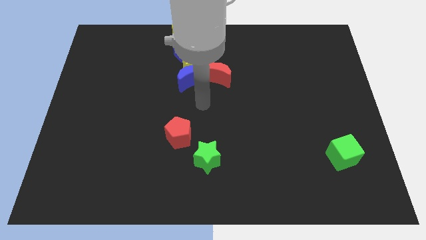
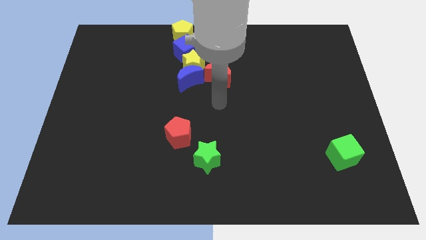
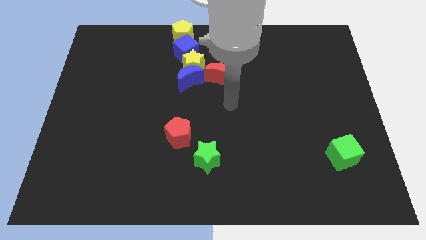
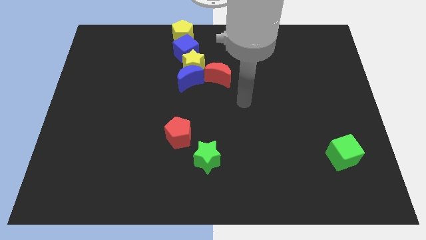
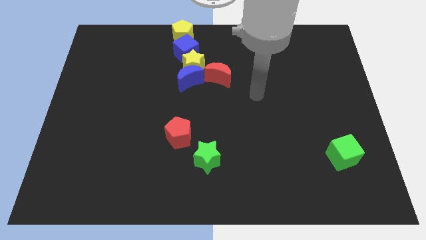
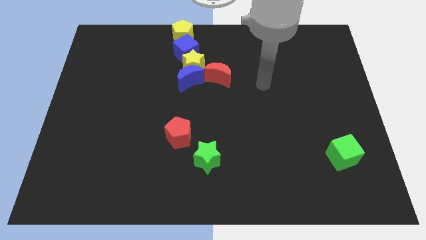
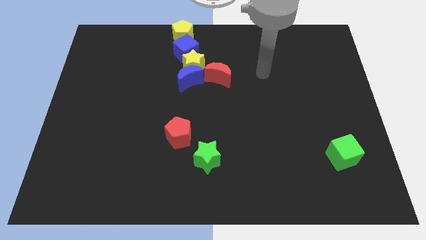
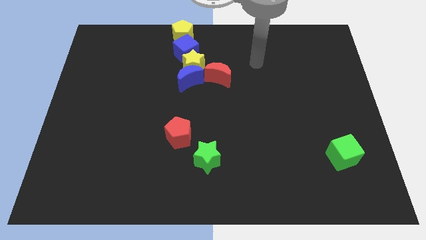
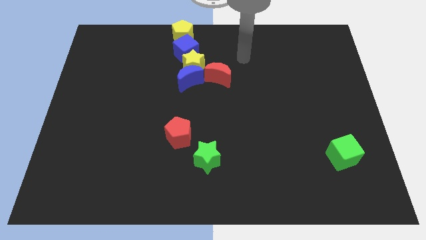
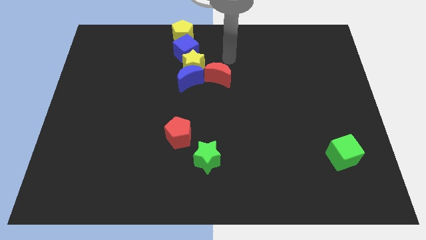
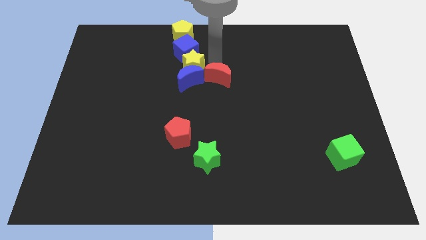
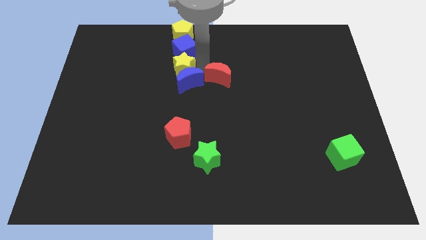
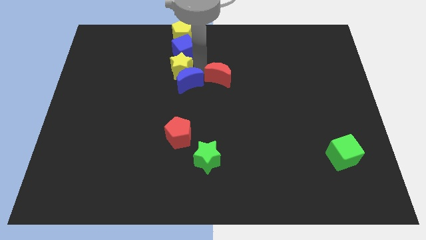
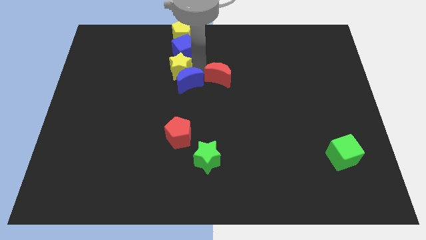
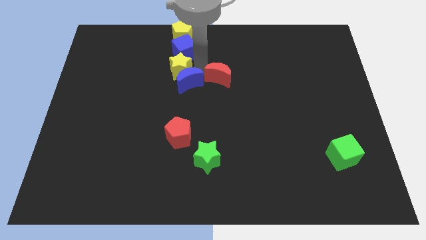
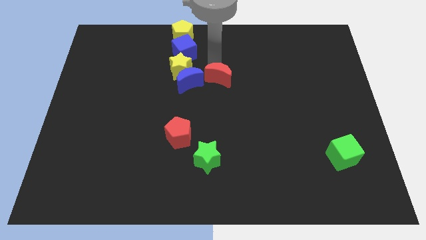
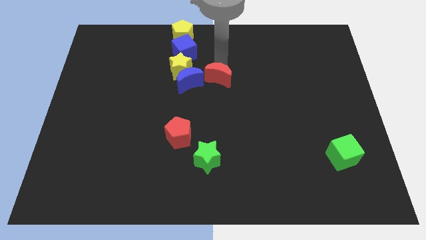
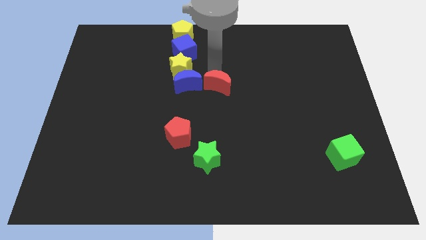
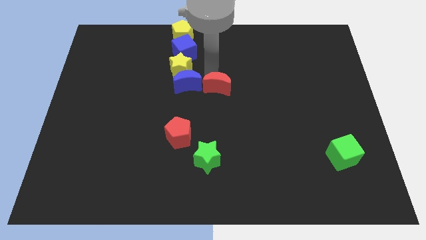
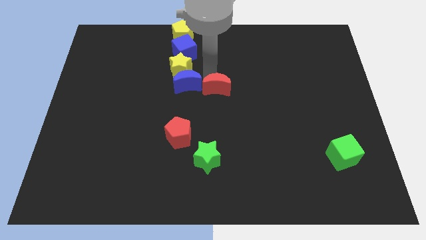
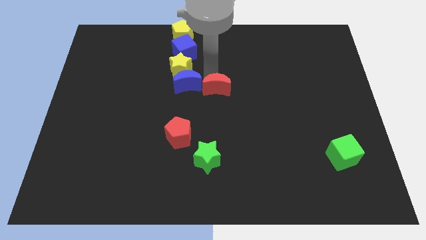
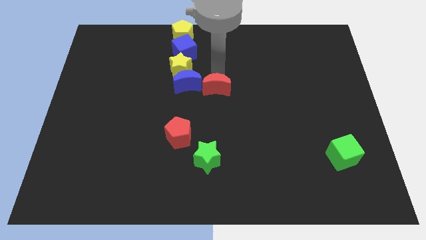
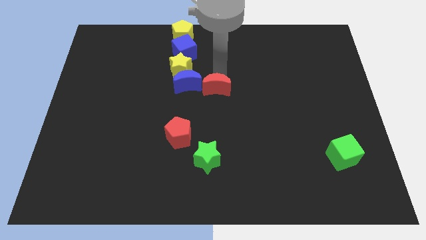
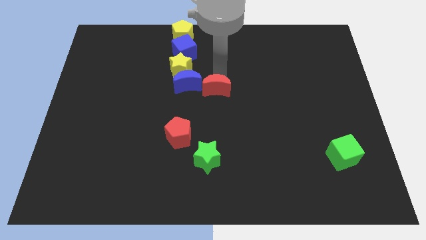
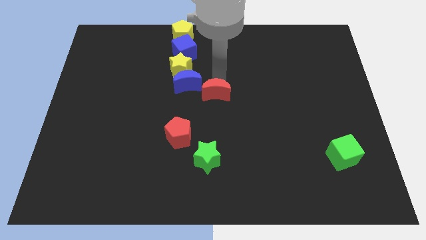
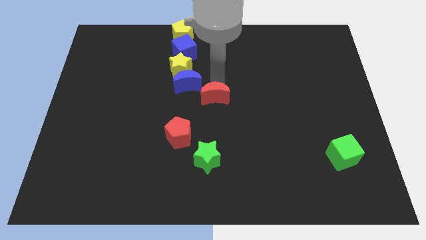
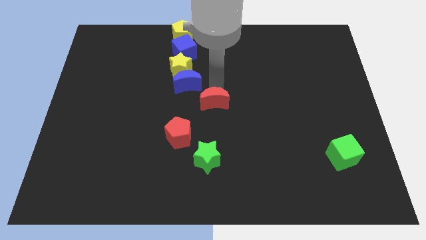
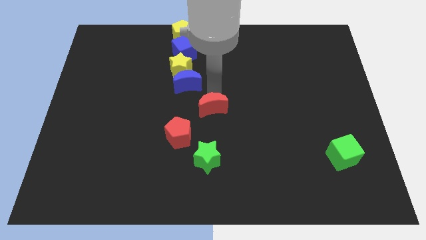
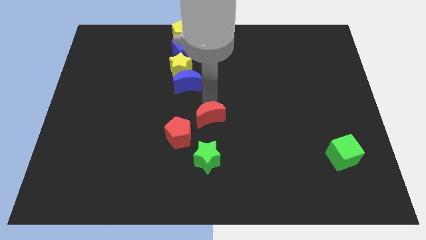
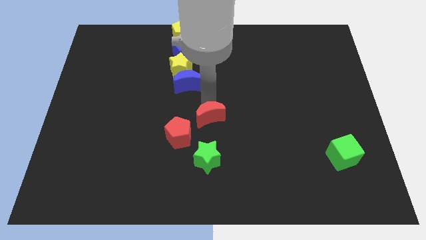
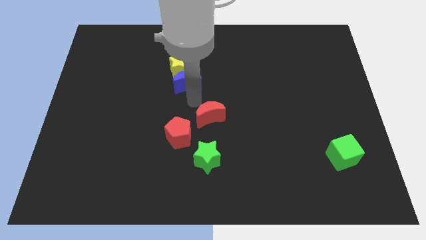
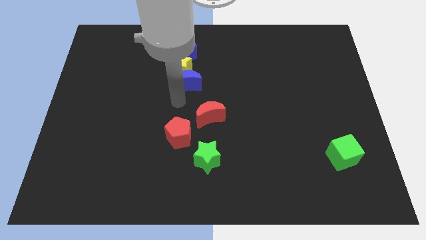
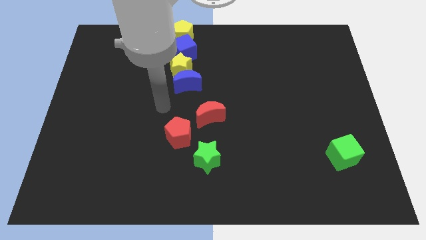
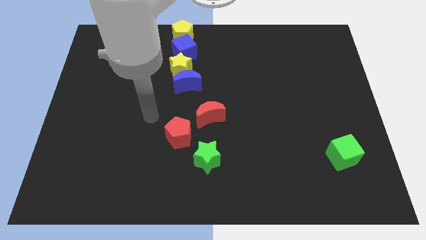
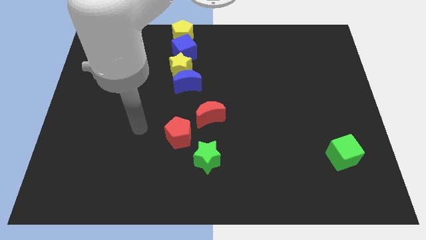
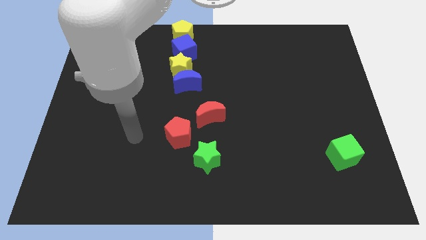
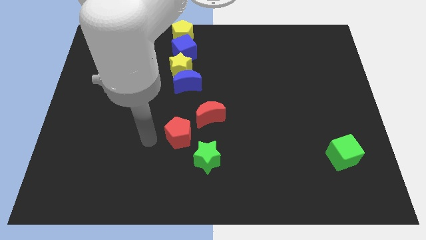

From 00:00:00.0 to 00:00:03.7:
separate red crescent from blue crescent

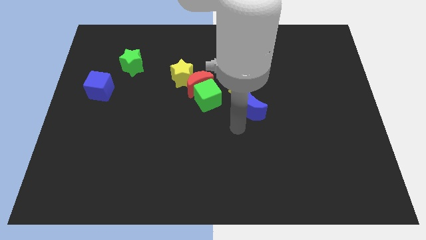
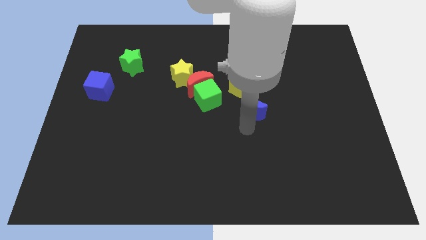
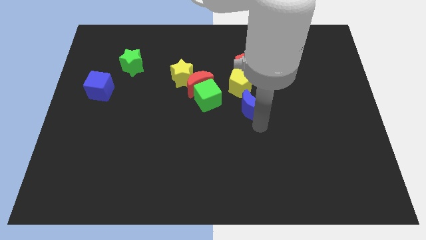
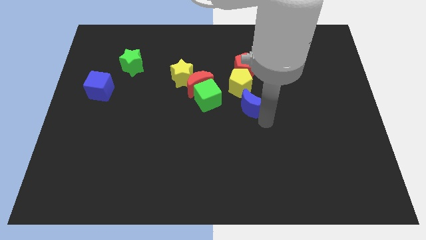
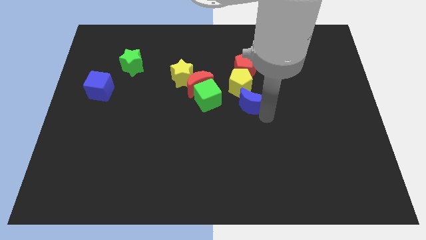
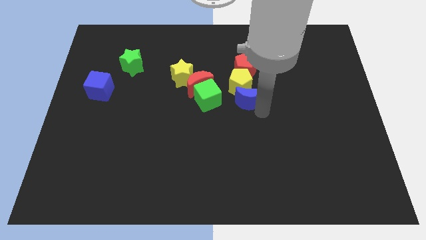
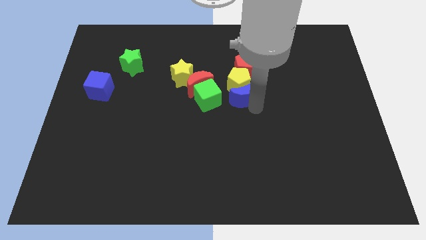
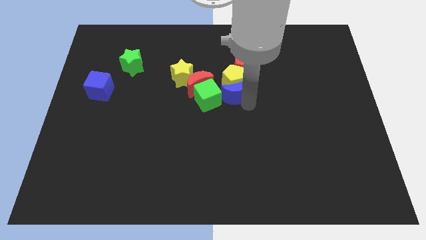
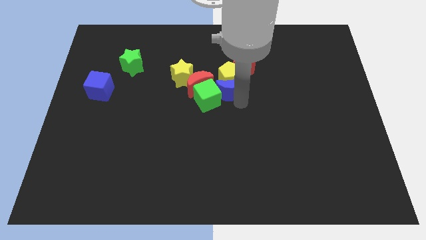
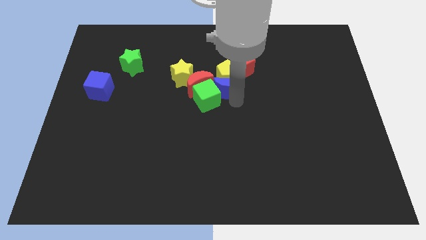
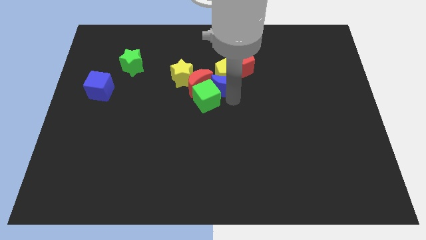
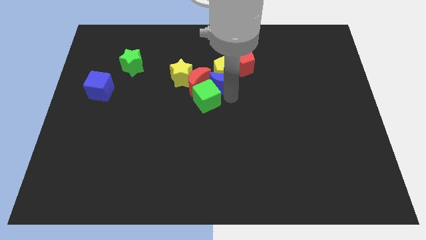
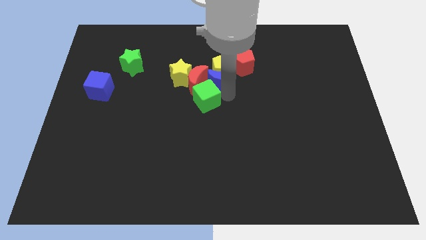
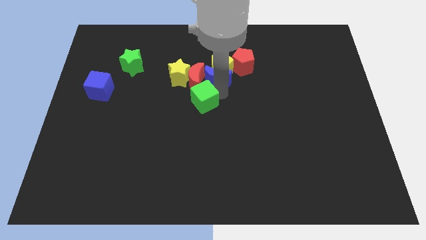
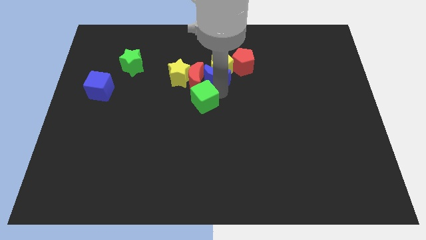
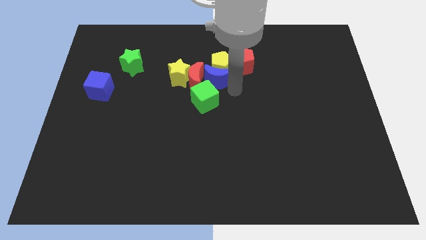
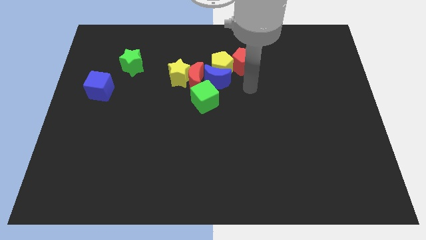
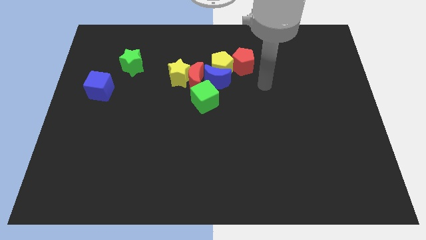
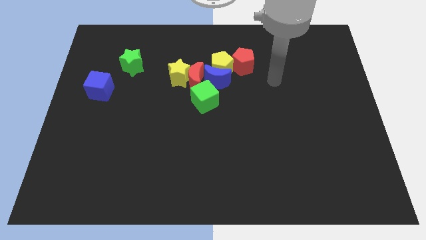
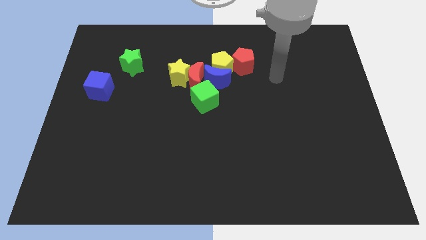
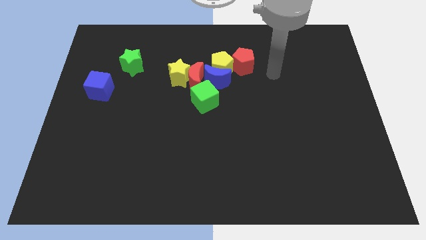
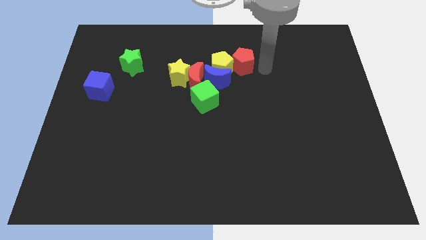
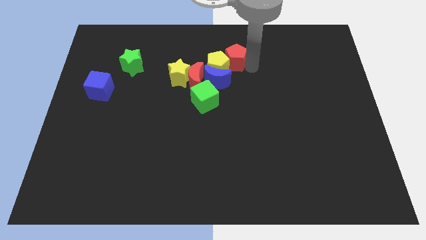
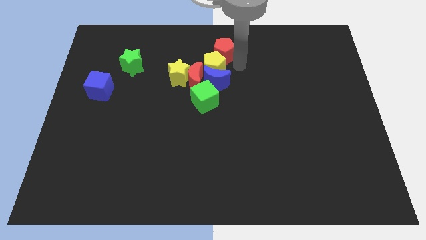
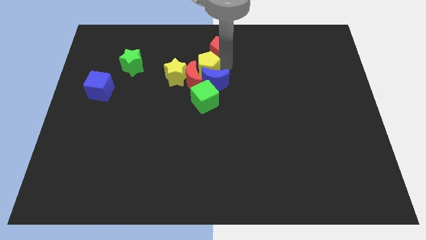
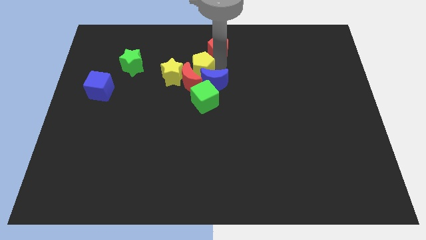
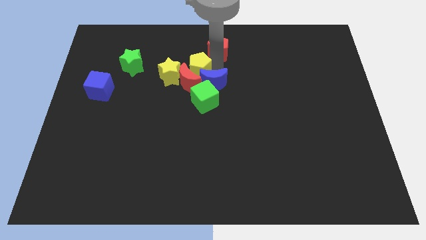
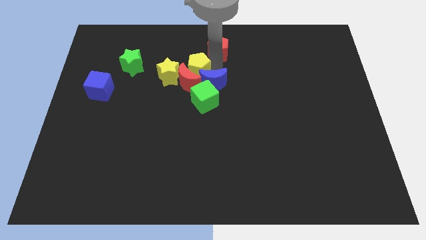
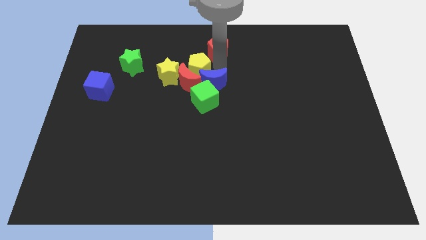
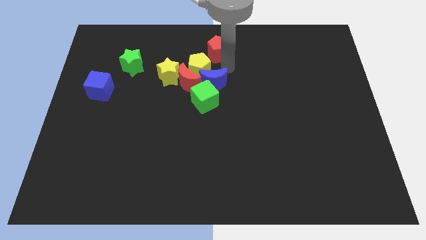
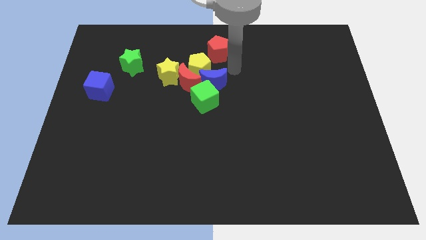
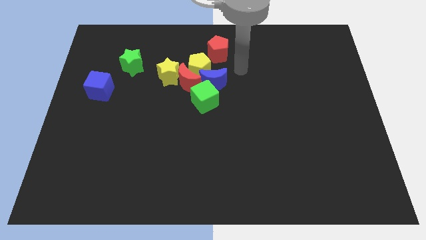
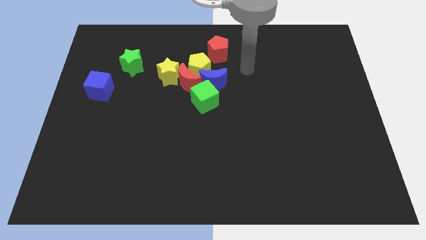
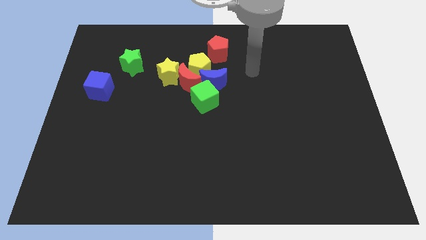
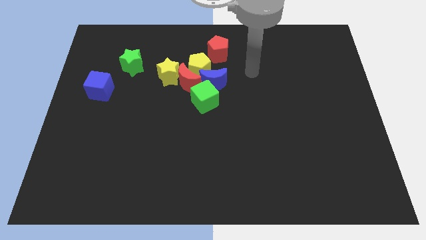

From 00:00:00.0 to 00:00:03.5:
move the yellow pentagon with the blue moon

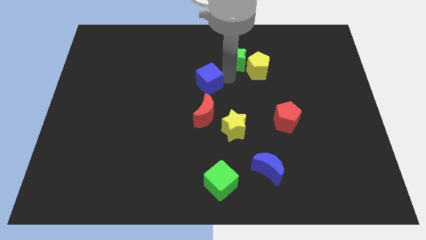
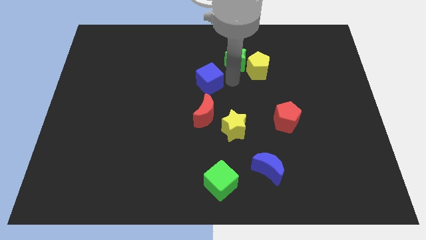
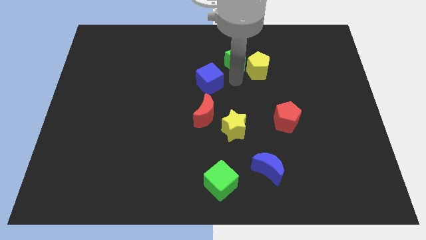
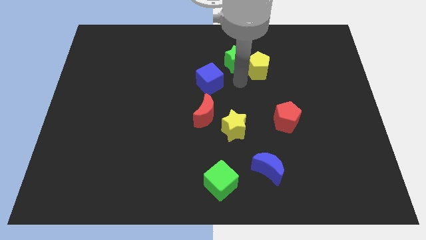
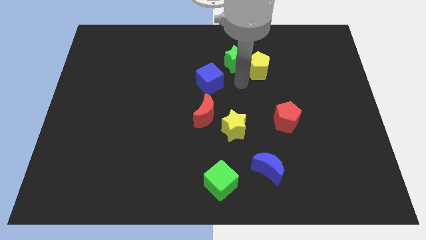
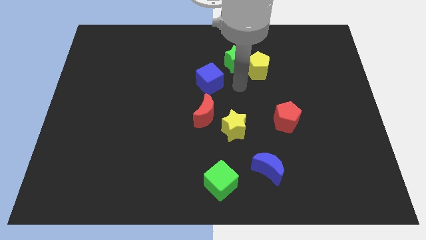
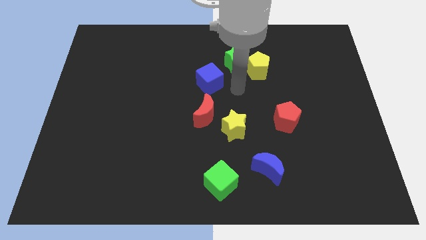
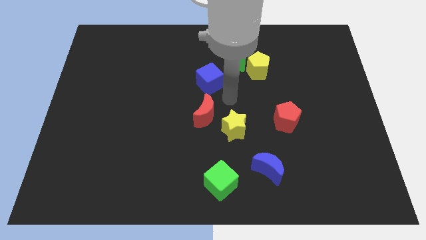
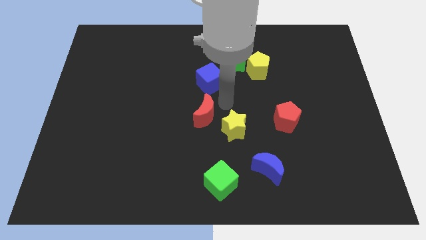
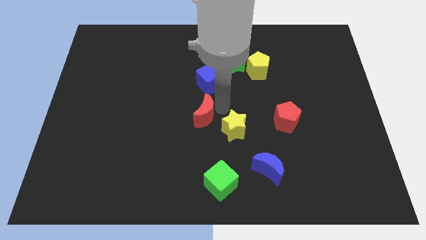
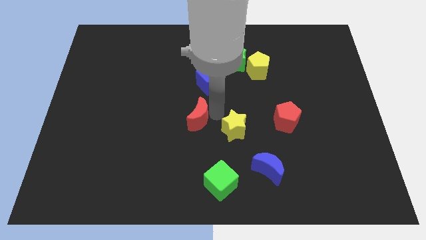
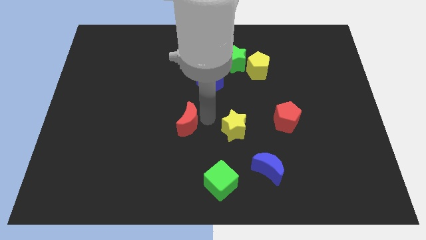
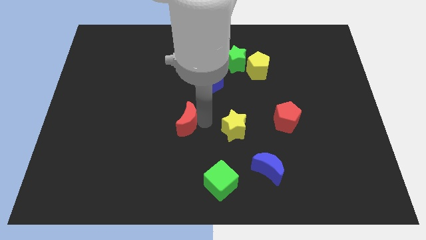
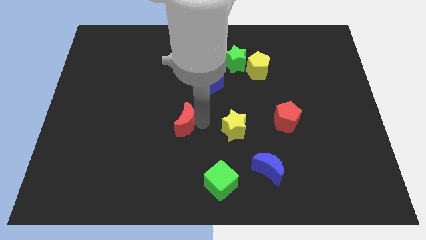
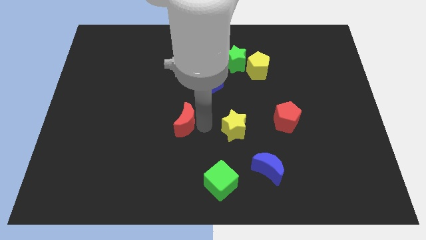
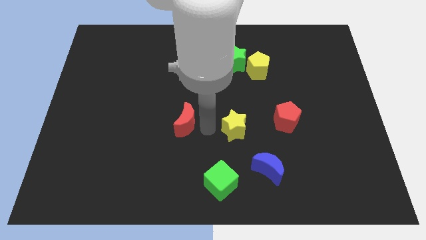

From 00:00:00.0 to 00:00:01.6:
move the red crescent slightly bottom left

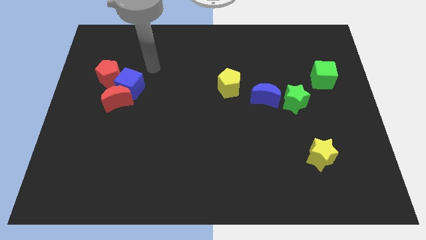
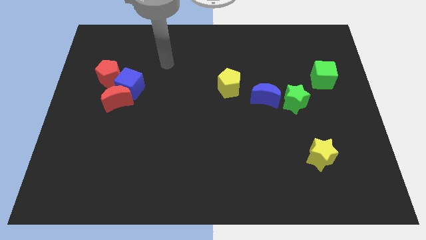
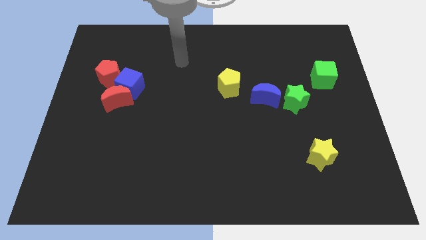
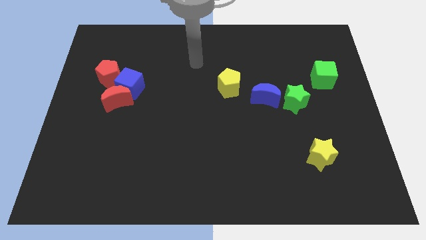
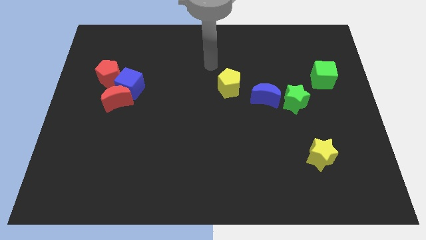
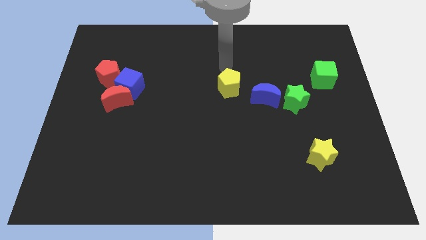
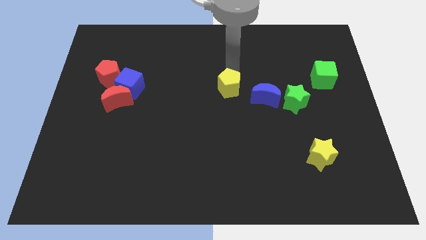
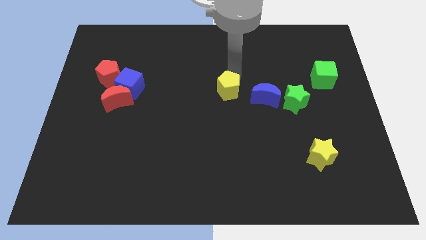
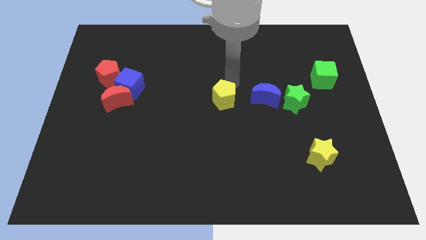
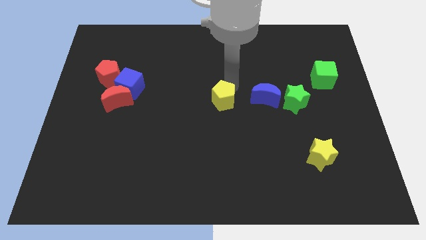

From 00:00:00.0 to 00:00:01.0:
slightly push the yellow pentagon to the center of the board
